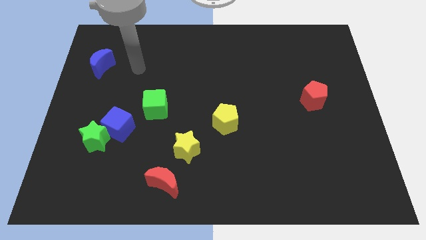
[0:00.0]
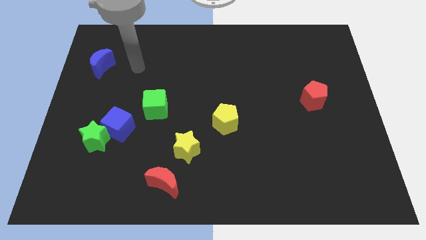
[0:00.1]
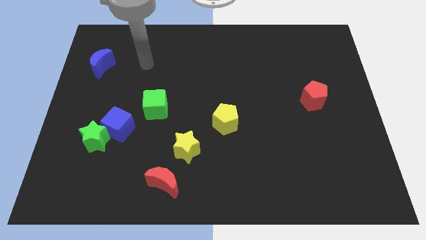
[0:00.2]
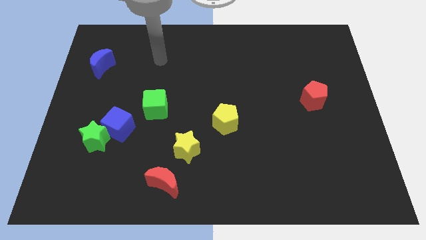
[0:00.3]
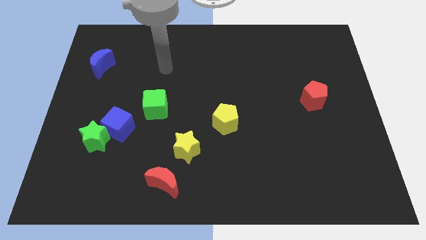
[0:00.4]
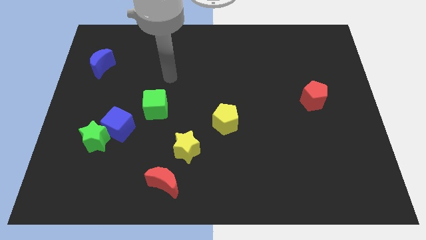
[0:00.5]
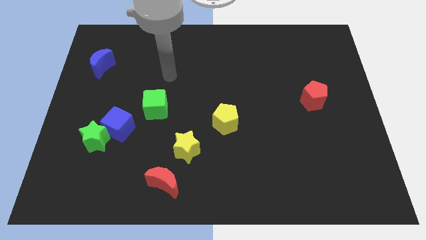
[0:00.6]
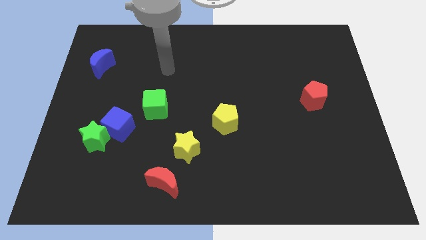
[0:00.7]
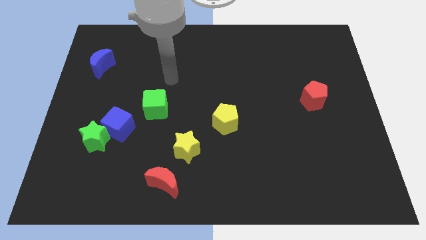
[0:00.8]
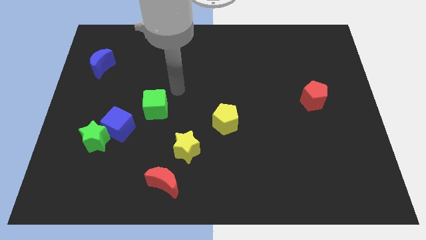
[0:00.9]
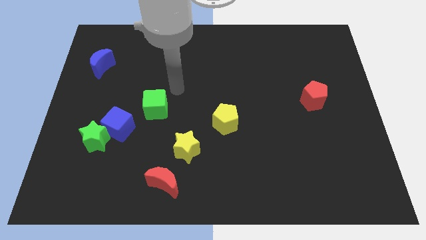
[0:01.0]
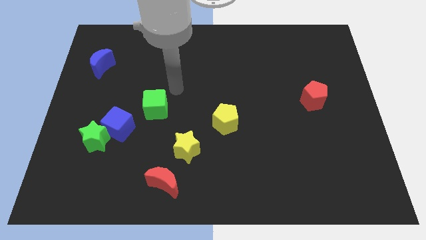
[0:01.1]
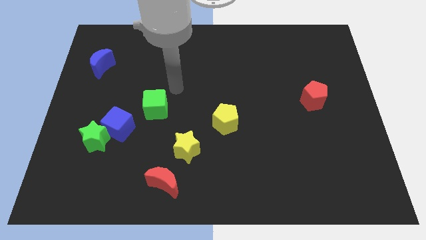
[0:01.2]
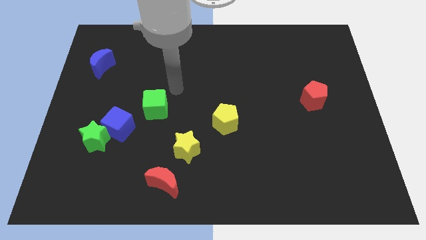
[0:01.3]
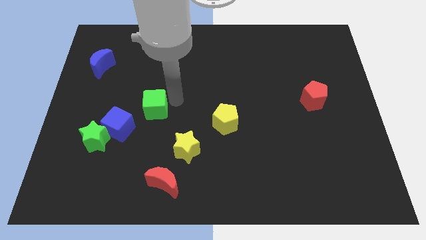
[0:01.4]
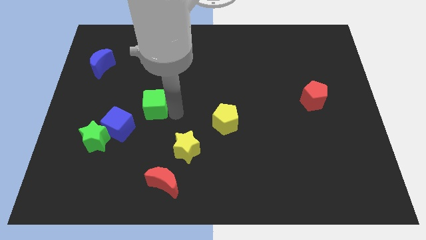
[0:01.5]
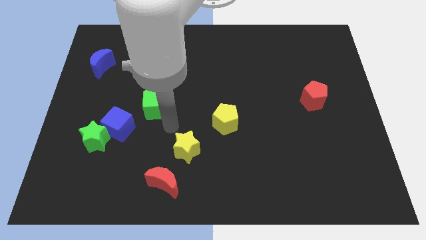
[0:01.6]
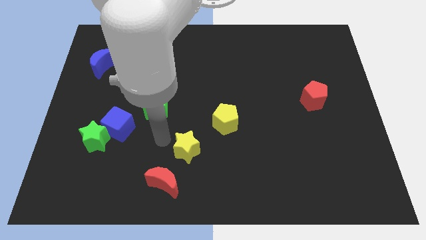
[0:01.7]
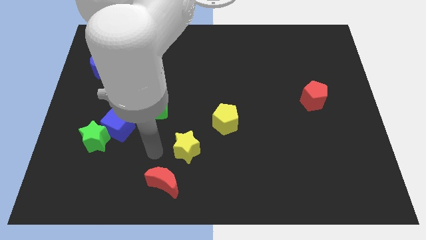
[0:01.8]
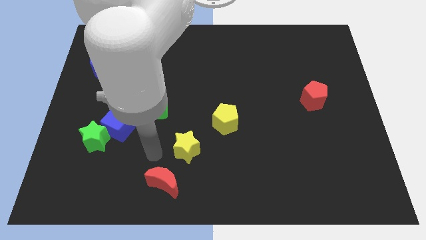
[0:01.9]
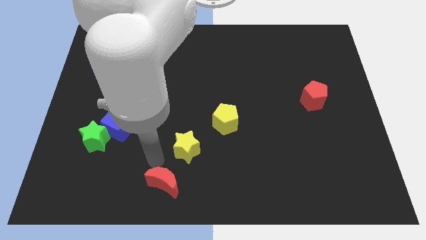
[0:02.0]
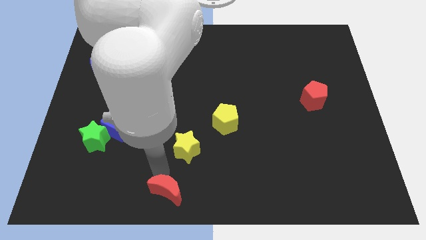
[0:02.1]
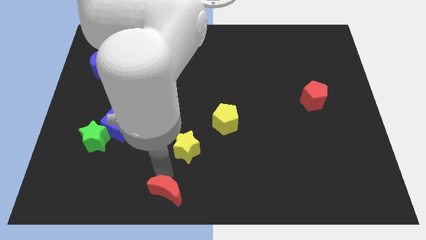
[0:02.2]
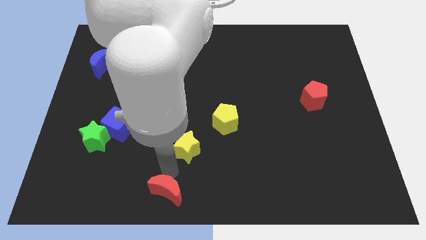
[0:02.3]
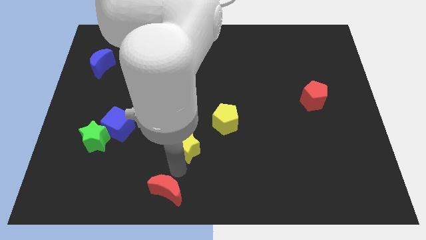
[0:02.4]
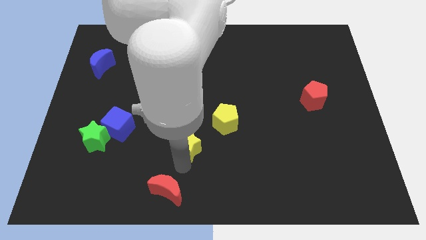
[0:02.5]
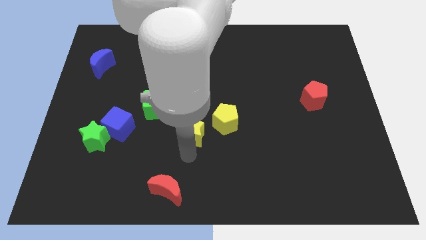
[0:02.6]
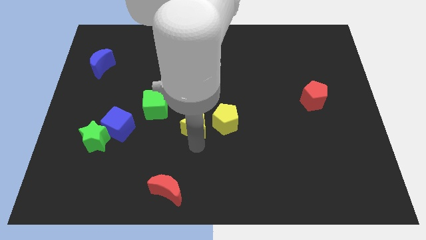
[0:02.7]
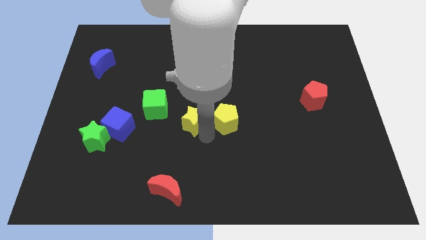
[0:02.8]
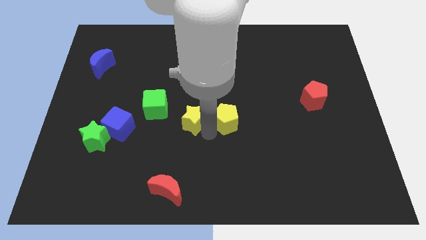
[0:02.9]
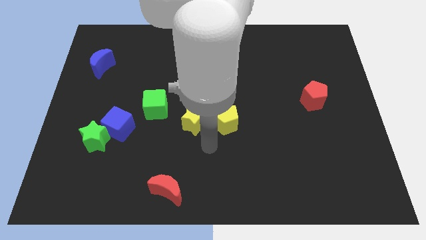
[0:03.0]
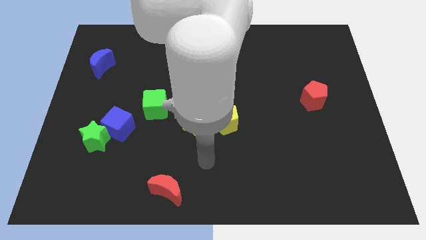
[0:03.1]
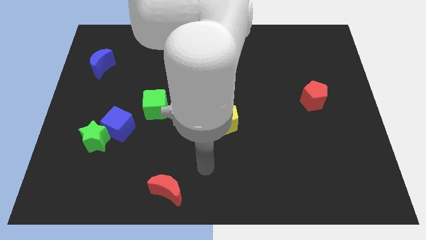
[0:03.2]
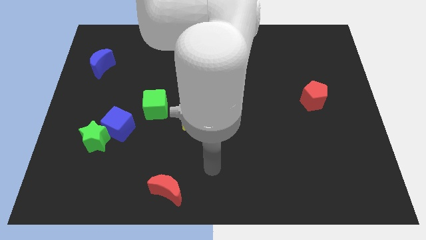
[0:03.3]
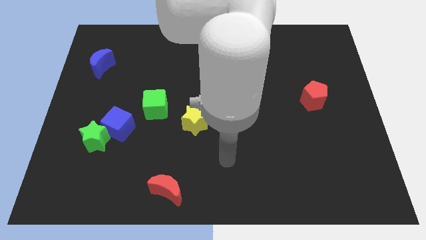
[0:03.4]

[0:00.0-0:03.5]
push the yellow star to the left of the yellow pentagon

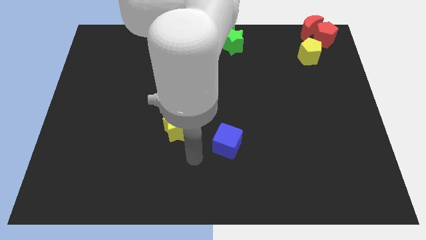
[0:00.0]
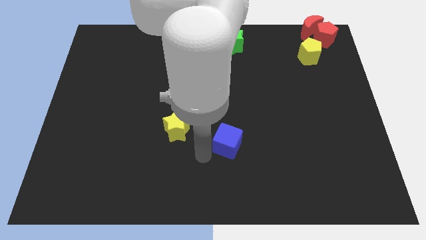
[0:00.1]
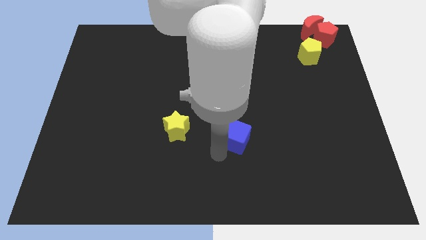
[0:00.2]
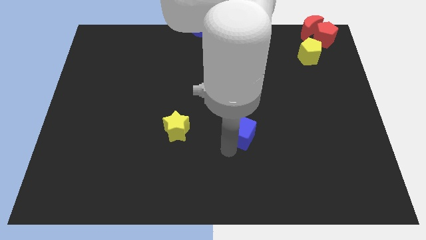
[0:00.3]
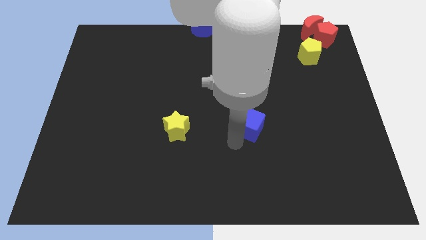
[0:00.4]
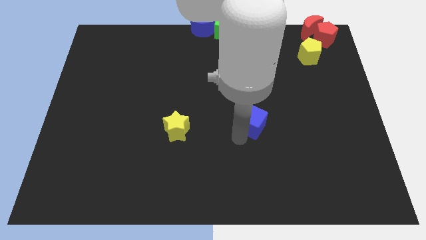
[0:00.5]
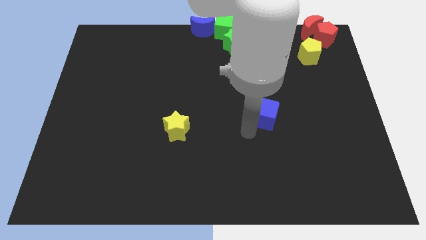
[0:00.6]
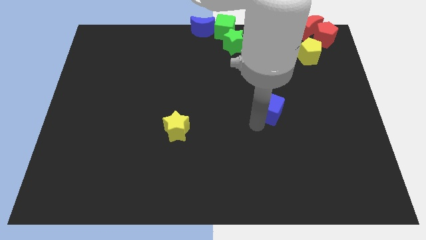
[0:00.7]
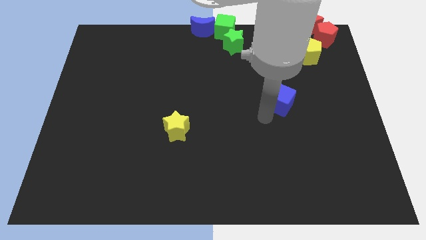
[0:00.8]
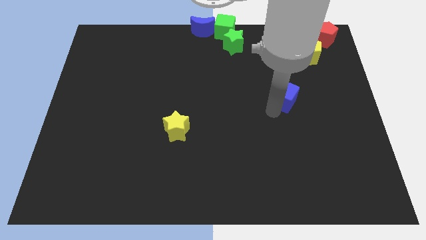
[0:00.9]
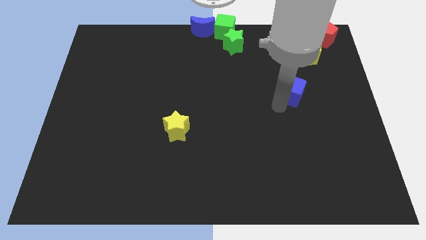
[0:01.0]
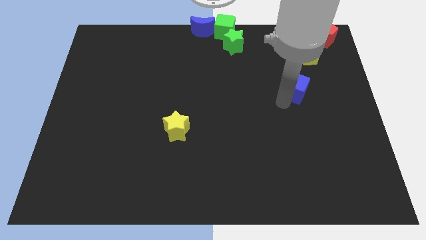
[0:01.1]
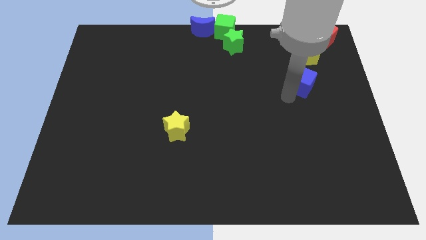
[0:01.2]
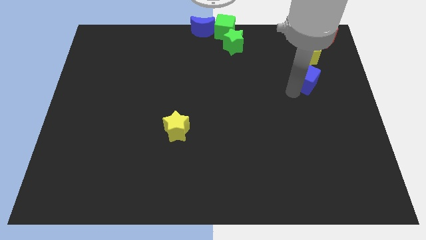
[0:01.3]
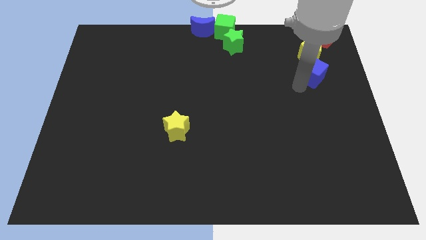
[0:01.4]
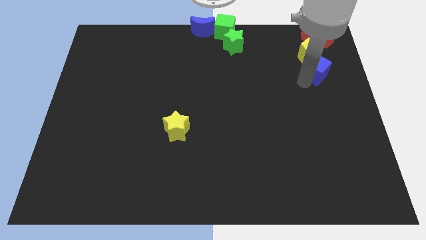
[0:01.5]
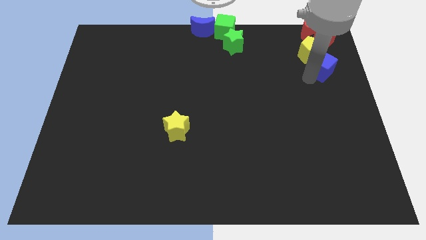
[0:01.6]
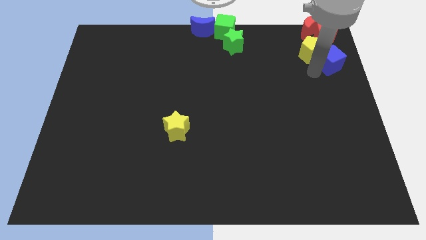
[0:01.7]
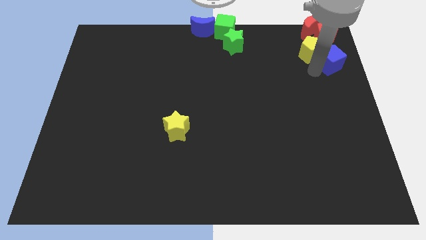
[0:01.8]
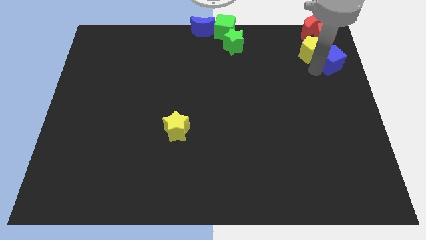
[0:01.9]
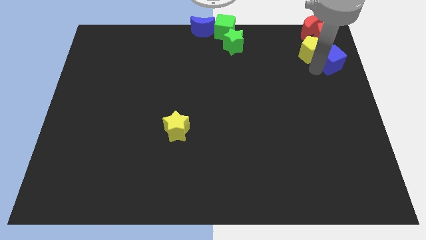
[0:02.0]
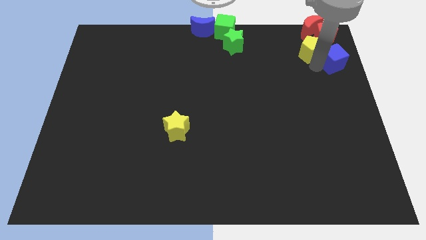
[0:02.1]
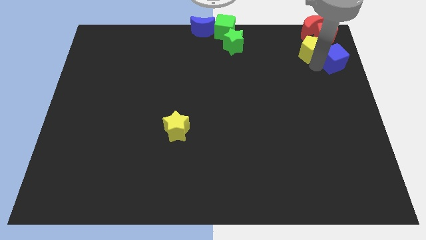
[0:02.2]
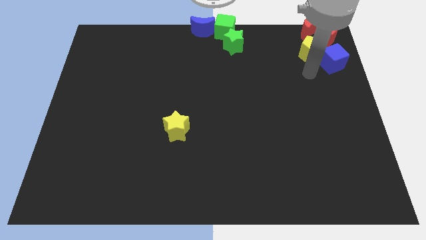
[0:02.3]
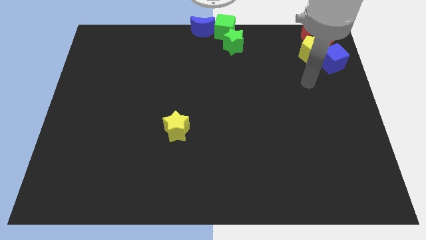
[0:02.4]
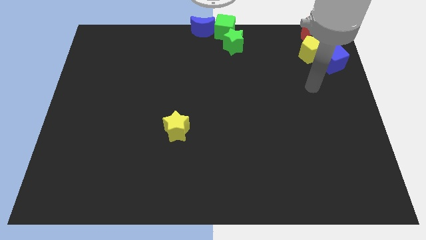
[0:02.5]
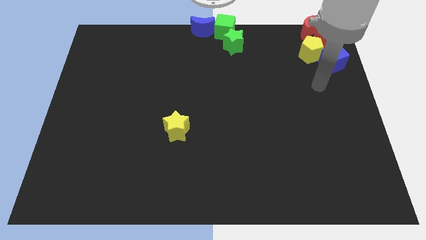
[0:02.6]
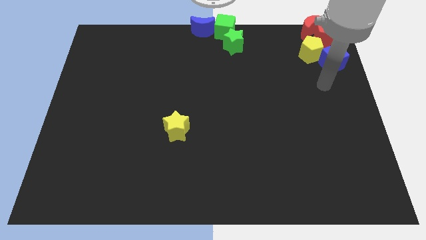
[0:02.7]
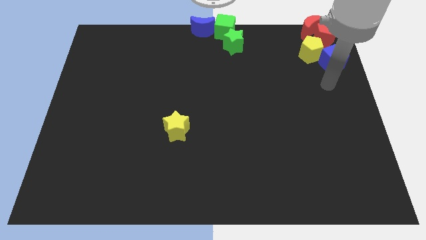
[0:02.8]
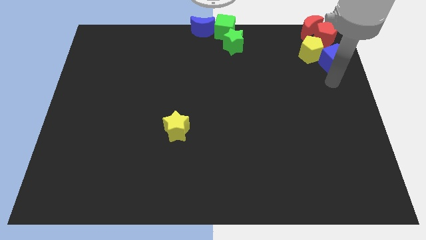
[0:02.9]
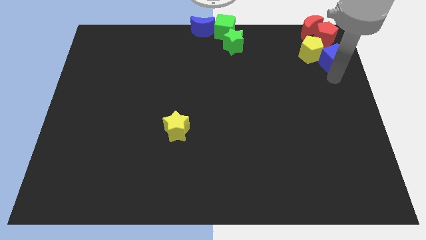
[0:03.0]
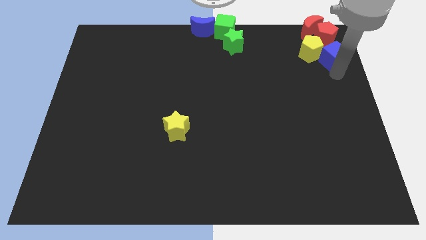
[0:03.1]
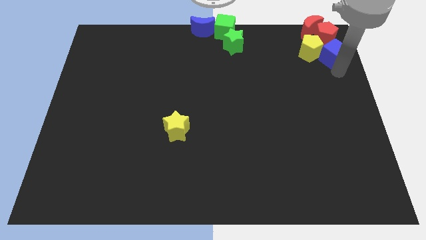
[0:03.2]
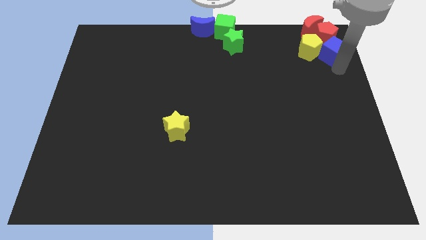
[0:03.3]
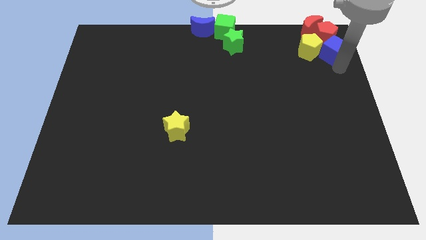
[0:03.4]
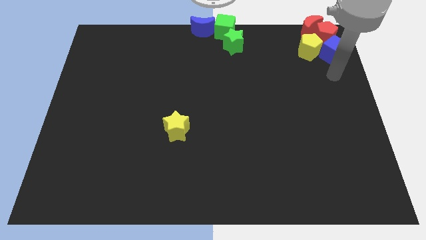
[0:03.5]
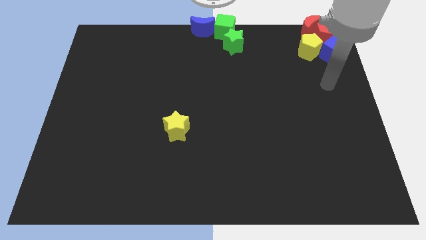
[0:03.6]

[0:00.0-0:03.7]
place the blue cube to the right side of yellow pentagon

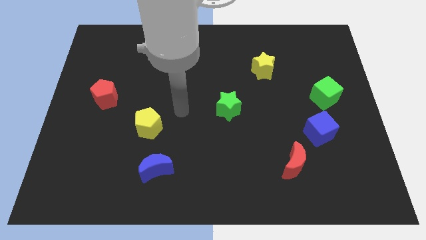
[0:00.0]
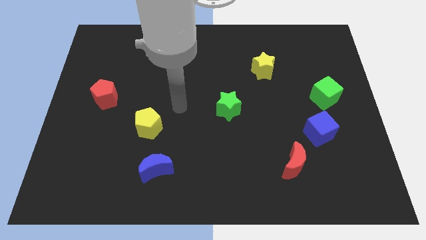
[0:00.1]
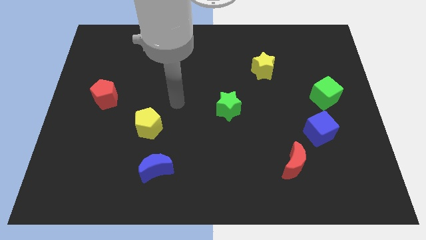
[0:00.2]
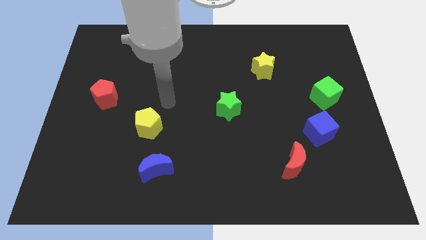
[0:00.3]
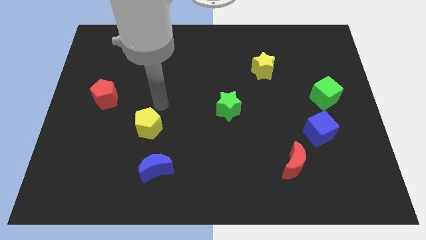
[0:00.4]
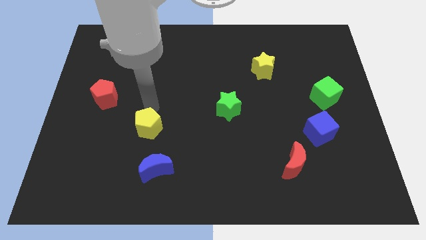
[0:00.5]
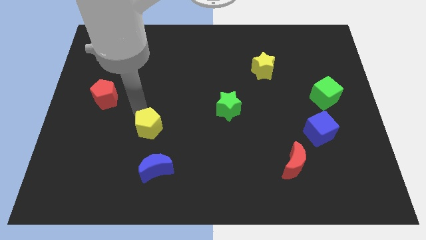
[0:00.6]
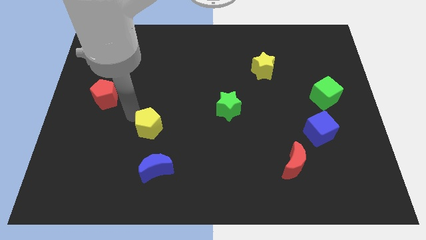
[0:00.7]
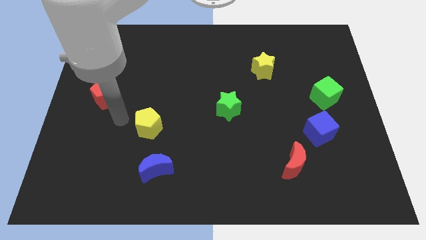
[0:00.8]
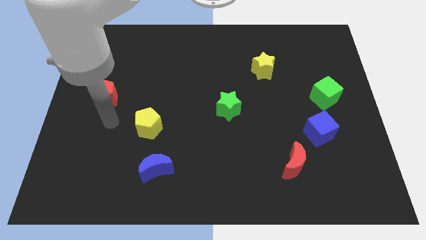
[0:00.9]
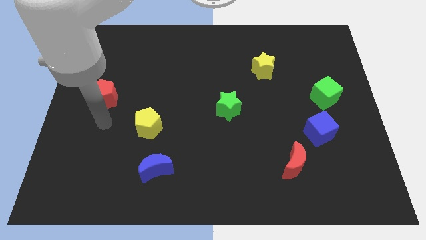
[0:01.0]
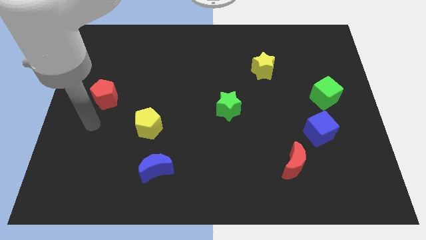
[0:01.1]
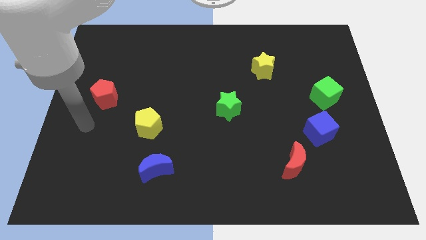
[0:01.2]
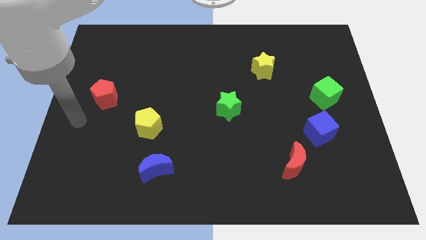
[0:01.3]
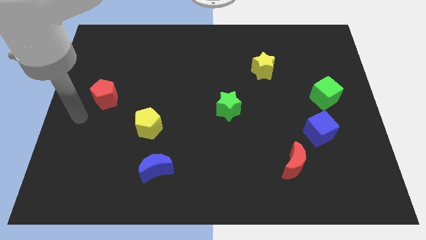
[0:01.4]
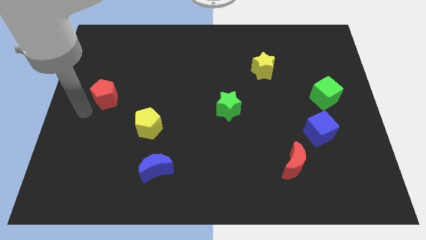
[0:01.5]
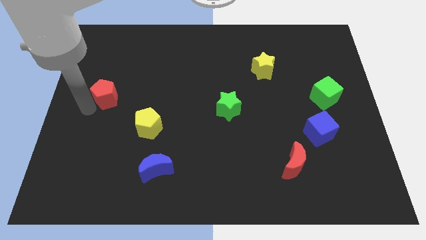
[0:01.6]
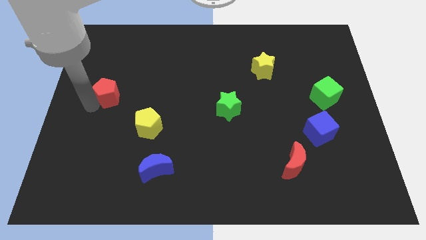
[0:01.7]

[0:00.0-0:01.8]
tap the left side of the red pentagon
